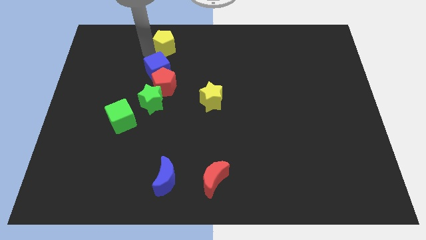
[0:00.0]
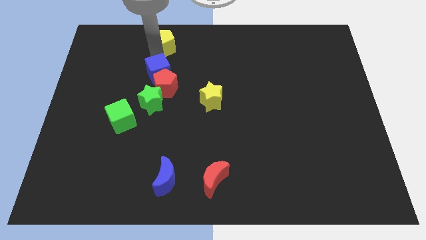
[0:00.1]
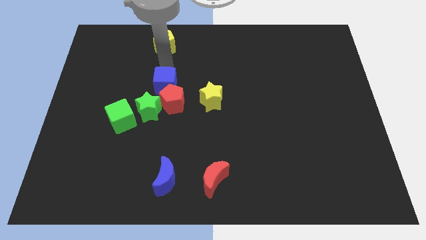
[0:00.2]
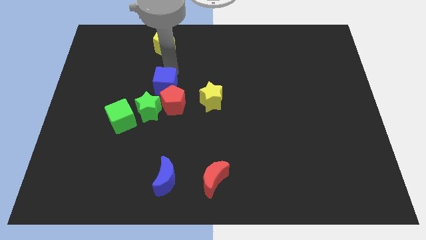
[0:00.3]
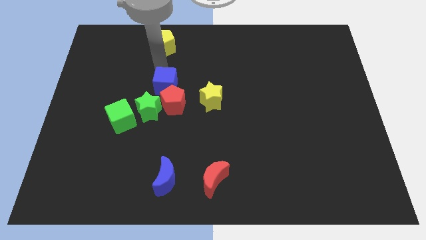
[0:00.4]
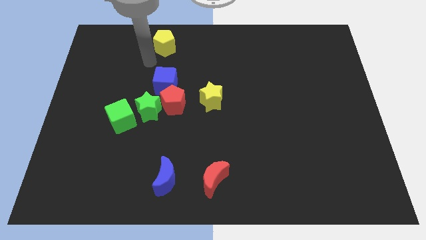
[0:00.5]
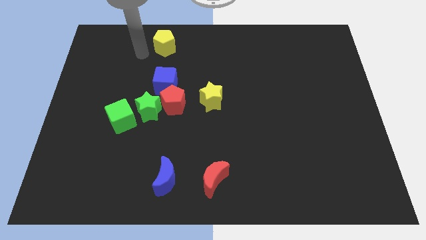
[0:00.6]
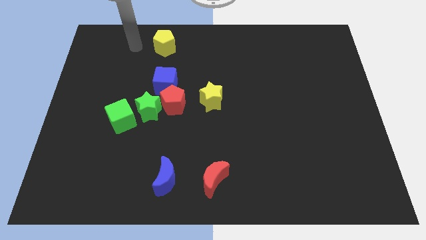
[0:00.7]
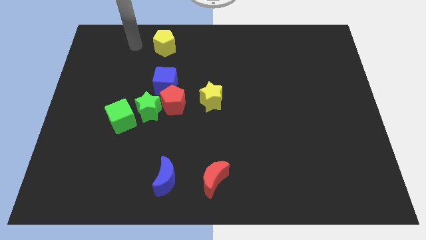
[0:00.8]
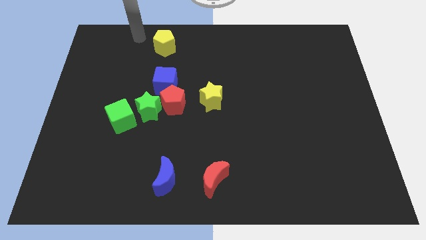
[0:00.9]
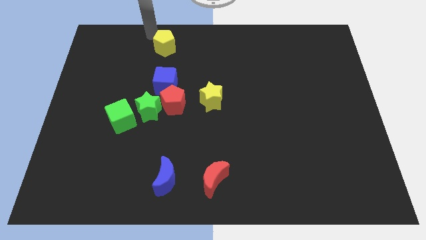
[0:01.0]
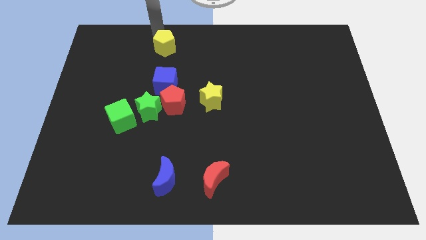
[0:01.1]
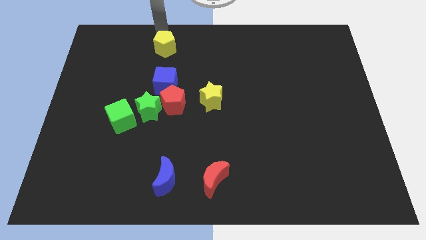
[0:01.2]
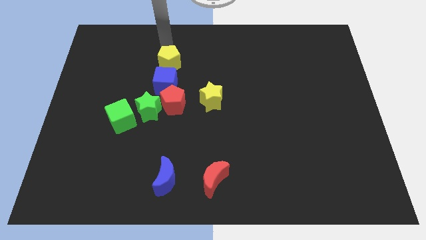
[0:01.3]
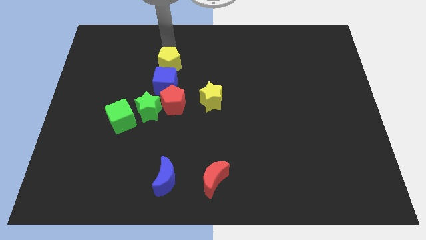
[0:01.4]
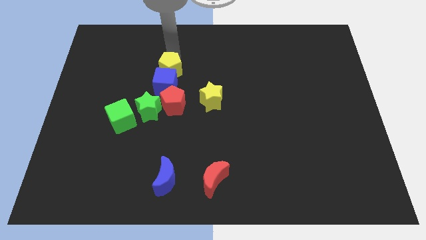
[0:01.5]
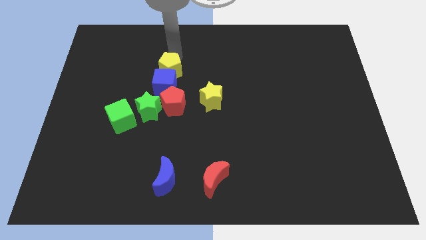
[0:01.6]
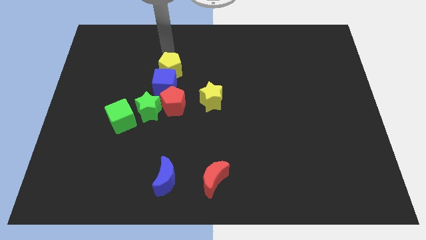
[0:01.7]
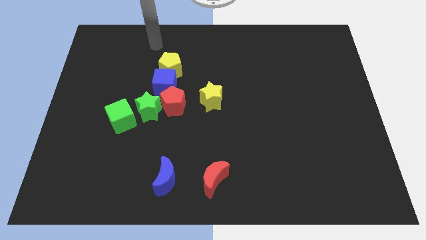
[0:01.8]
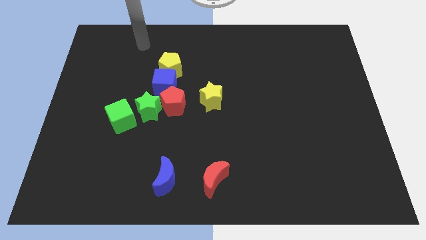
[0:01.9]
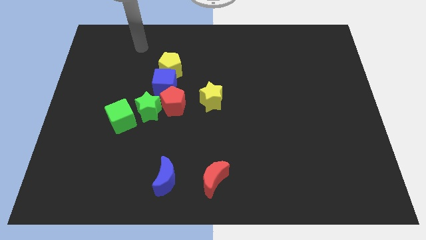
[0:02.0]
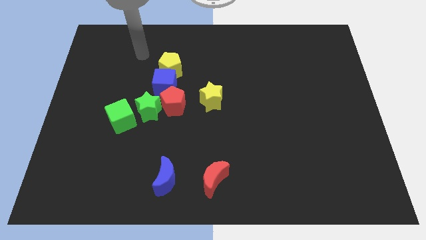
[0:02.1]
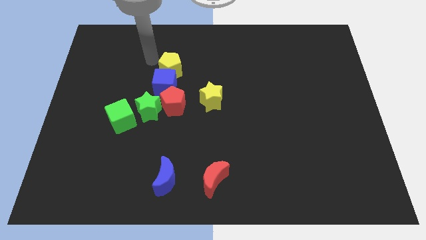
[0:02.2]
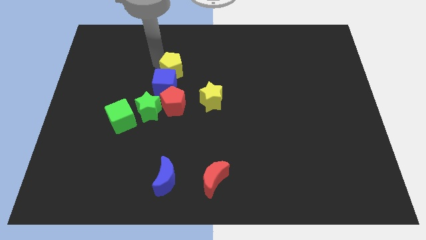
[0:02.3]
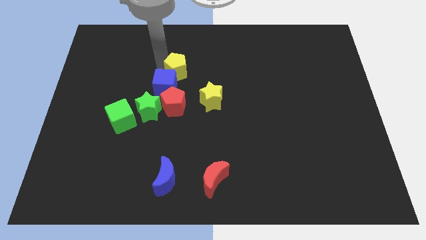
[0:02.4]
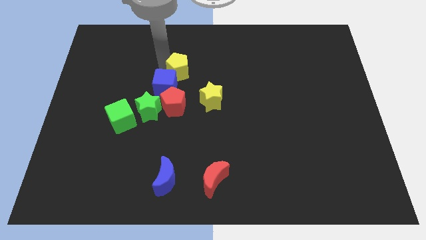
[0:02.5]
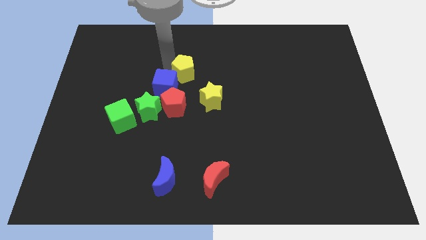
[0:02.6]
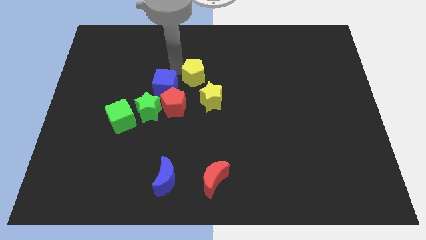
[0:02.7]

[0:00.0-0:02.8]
slide the yellow pentagon towards the blue cube

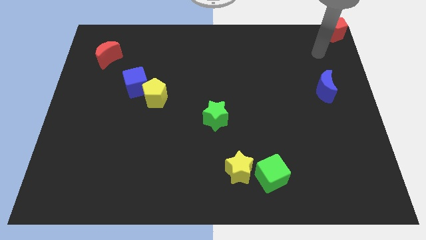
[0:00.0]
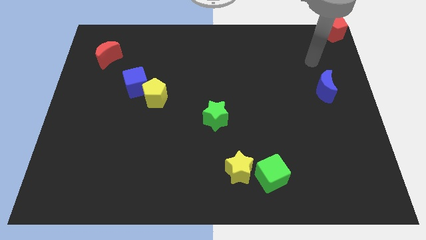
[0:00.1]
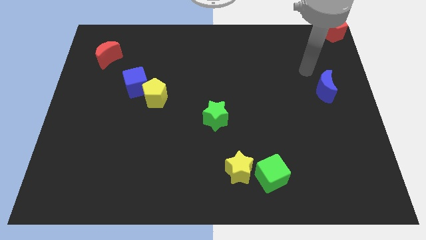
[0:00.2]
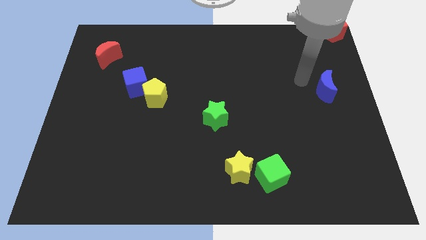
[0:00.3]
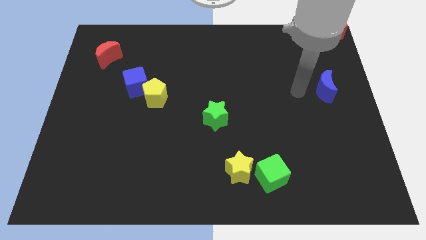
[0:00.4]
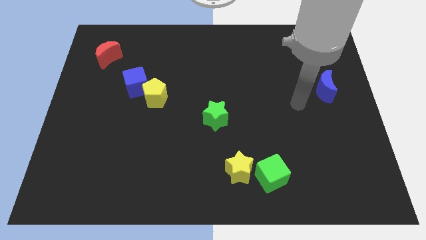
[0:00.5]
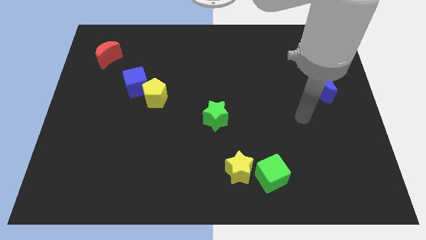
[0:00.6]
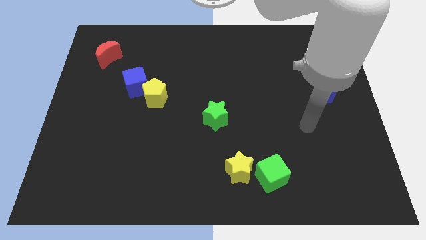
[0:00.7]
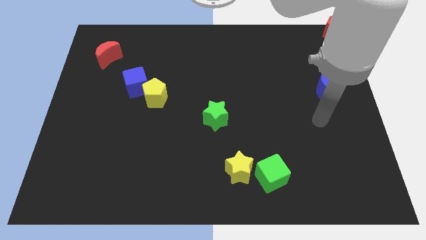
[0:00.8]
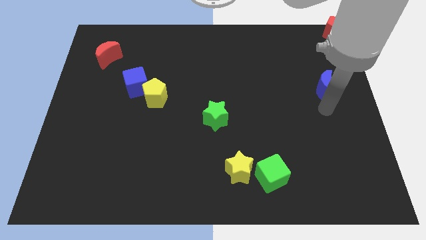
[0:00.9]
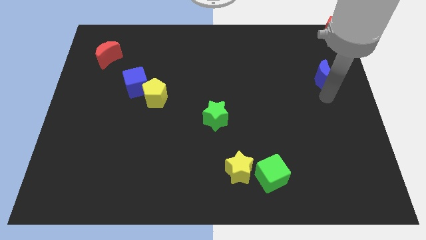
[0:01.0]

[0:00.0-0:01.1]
move your arm below the blue crescent

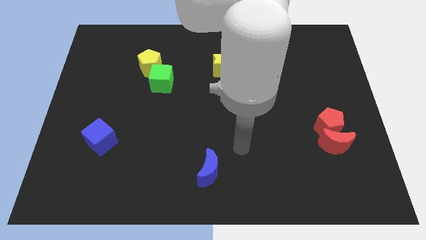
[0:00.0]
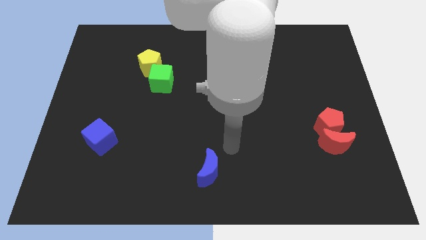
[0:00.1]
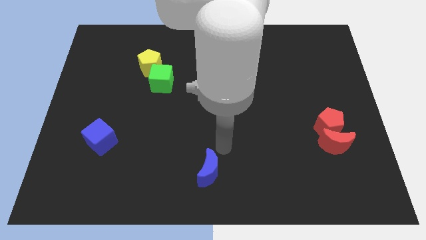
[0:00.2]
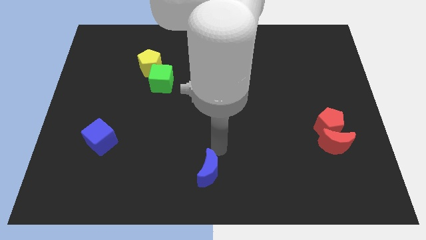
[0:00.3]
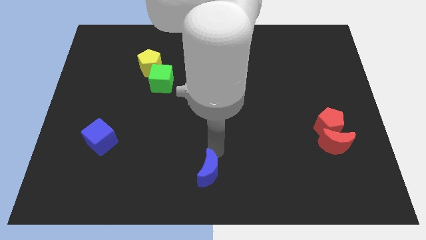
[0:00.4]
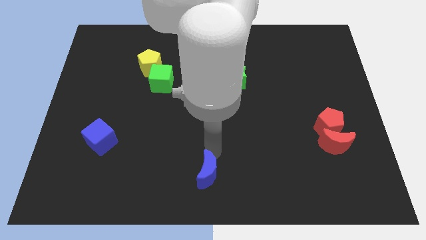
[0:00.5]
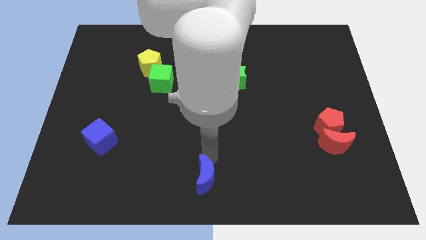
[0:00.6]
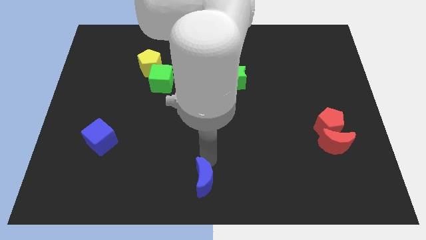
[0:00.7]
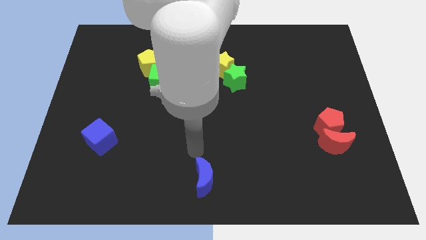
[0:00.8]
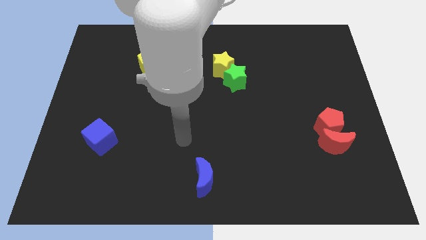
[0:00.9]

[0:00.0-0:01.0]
slightly push the blue crescent down towards the bottom center

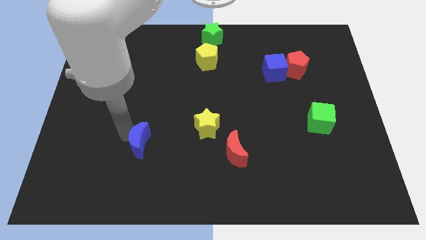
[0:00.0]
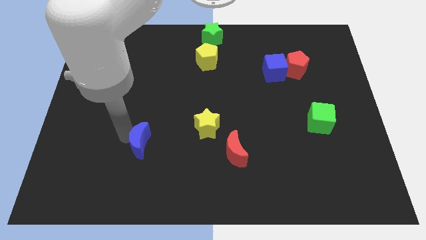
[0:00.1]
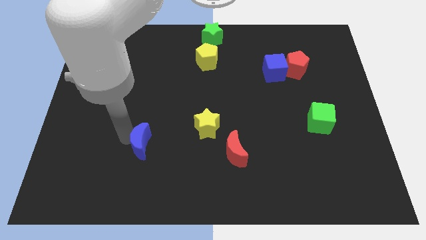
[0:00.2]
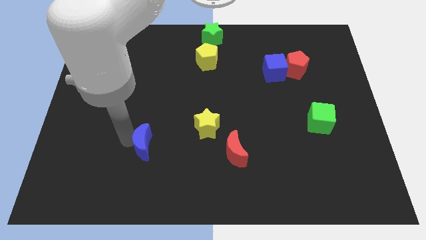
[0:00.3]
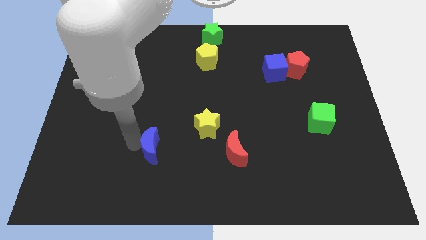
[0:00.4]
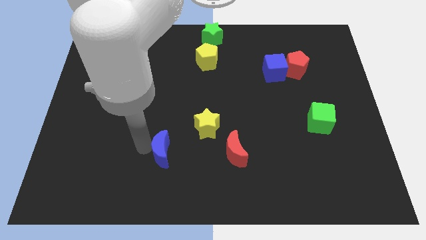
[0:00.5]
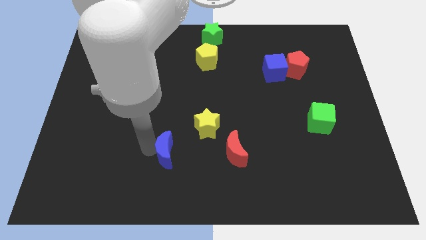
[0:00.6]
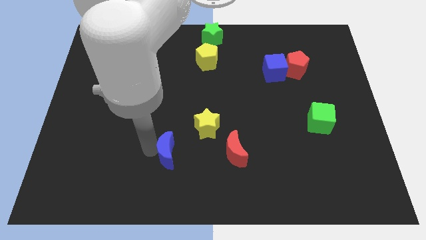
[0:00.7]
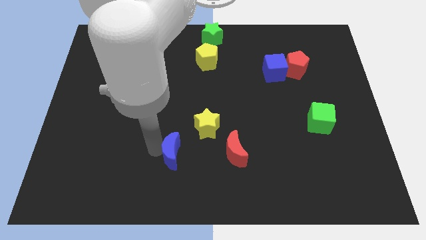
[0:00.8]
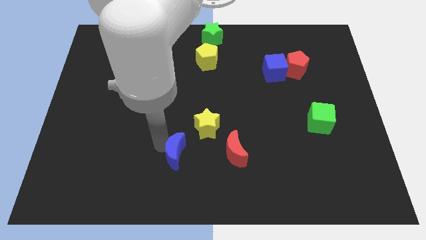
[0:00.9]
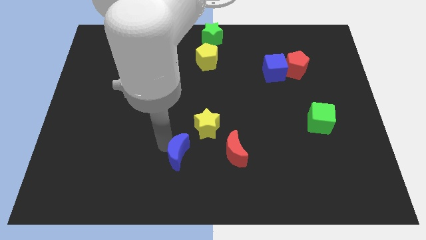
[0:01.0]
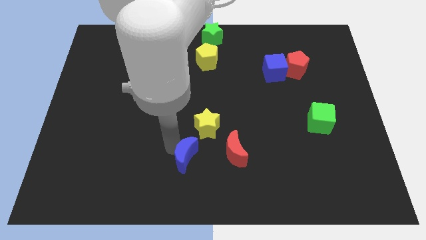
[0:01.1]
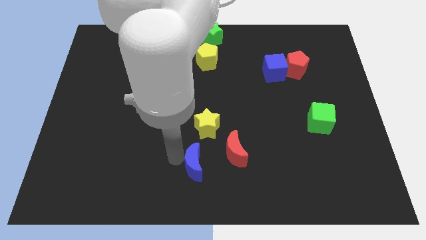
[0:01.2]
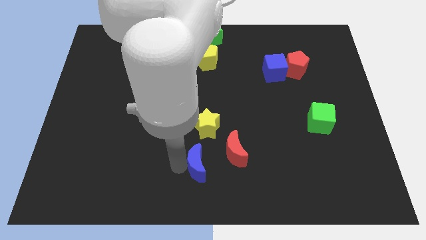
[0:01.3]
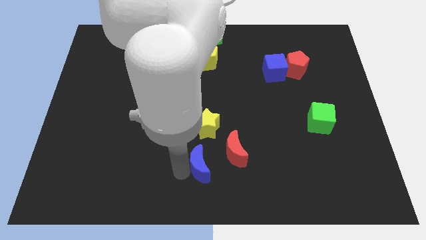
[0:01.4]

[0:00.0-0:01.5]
push the blue crescent to the bottom of yellow star

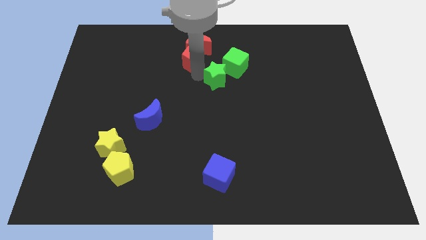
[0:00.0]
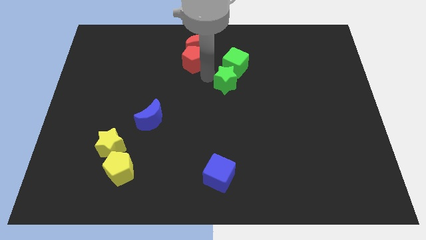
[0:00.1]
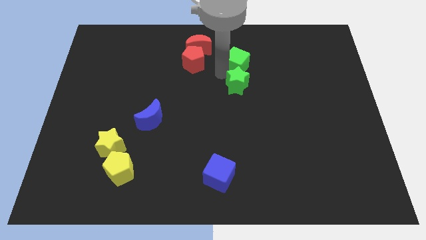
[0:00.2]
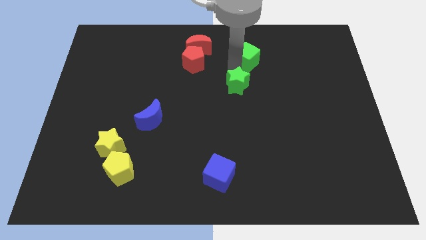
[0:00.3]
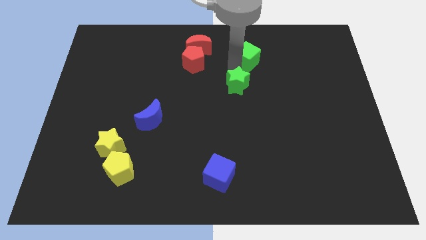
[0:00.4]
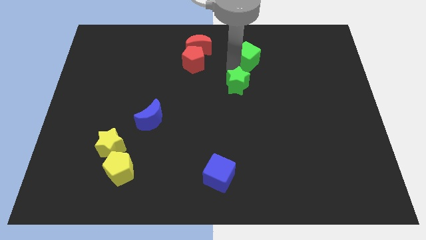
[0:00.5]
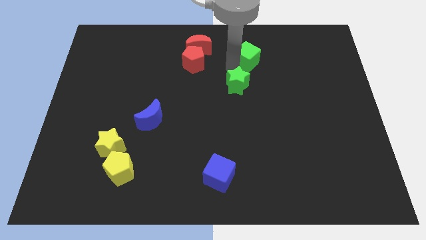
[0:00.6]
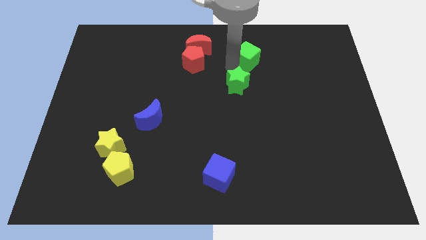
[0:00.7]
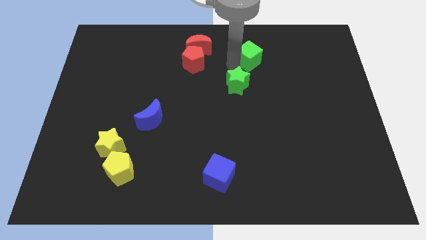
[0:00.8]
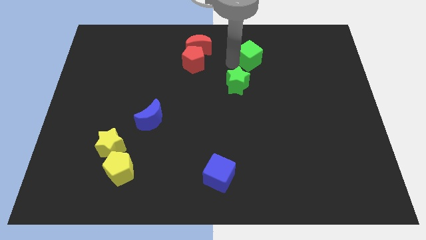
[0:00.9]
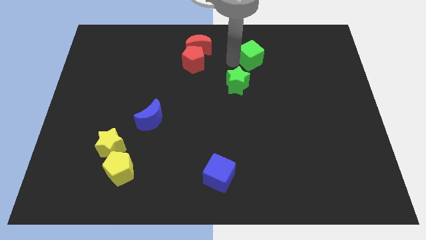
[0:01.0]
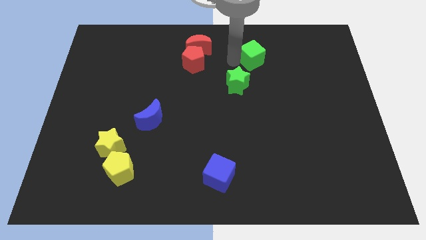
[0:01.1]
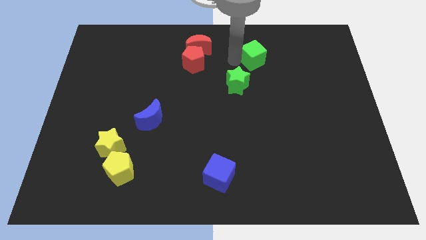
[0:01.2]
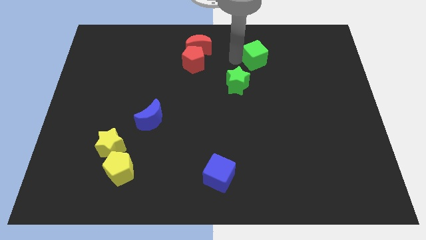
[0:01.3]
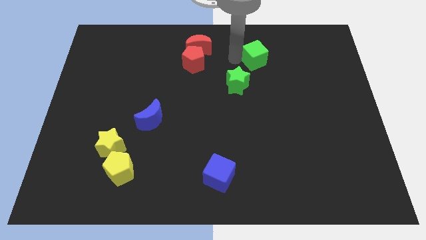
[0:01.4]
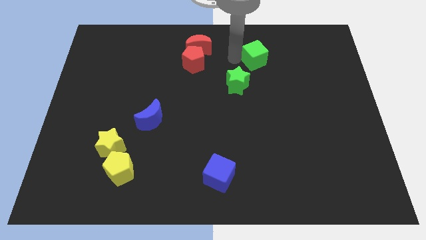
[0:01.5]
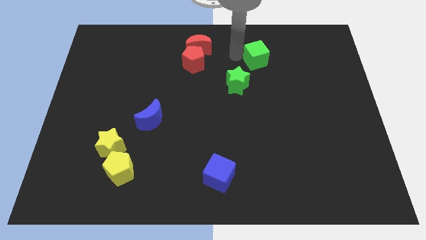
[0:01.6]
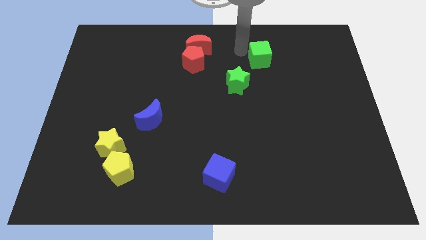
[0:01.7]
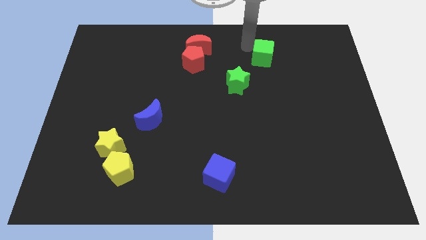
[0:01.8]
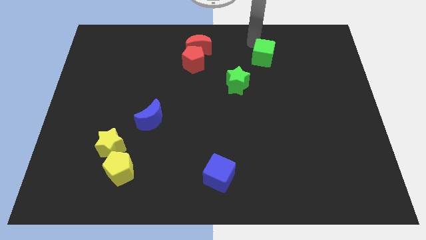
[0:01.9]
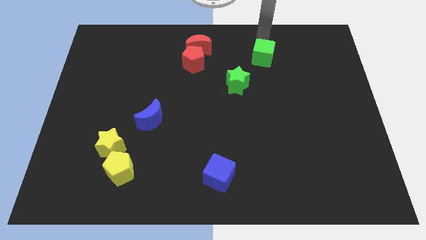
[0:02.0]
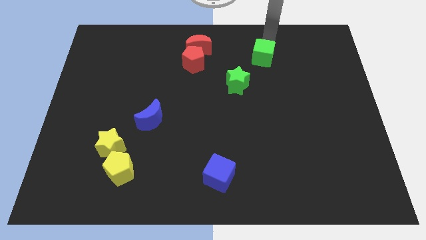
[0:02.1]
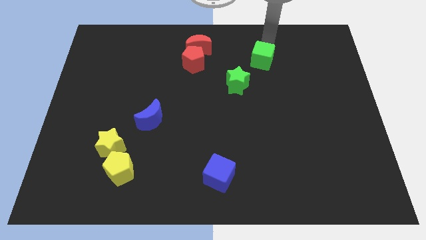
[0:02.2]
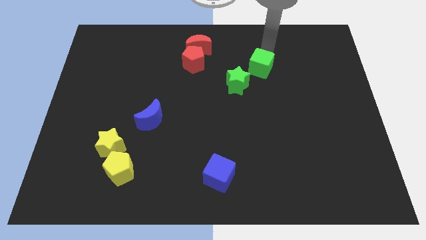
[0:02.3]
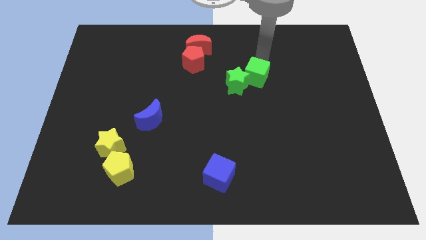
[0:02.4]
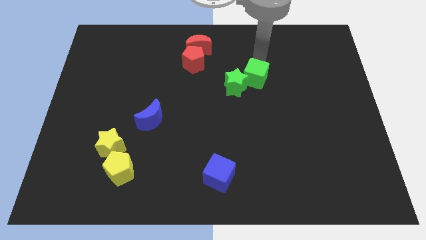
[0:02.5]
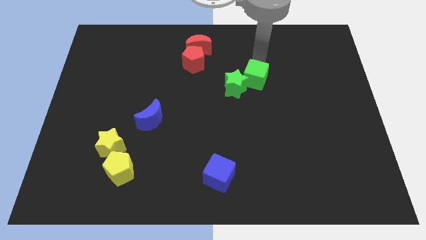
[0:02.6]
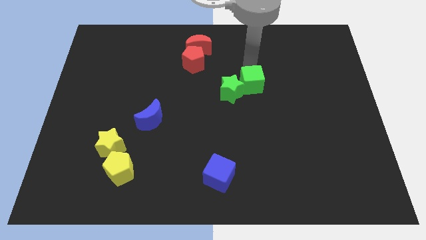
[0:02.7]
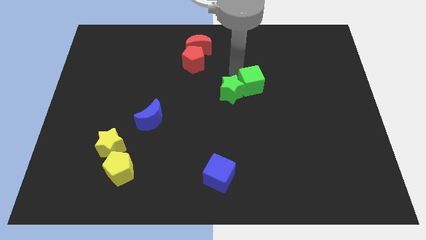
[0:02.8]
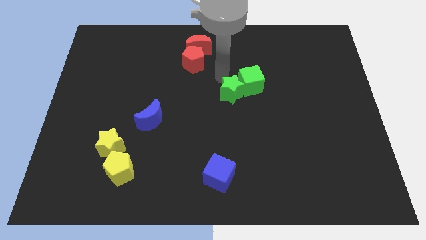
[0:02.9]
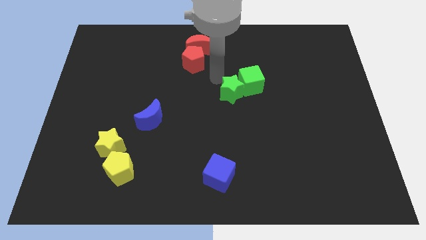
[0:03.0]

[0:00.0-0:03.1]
slide the green blocks towards the bottom side
